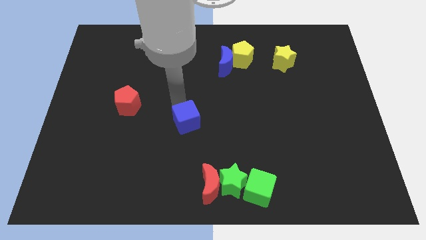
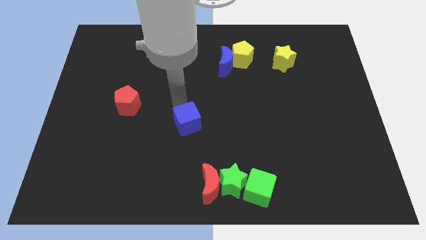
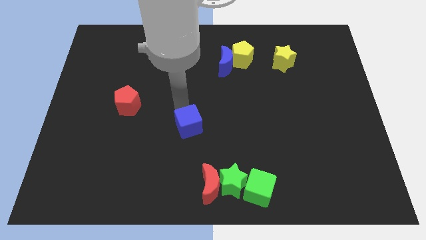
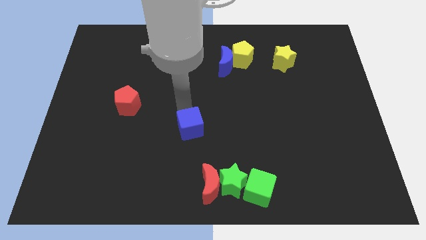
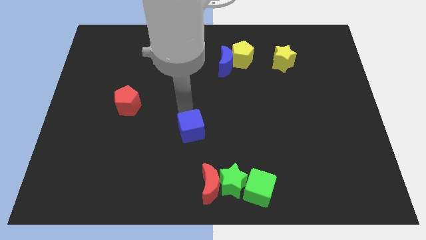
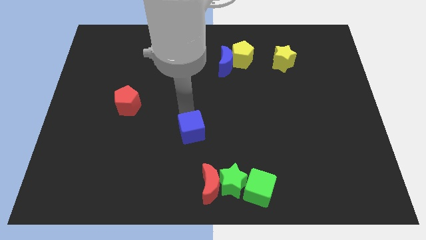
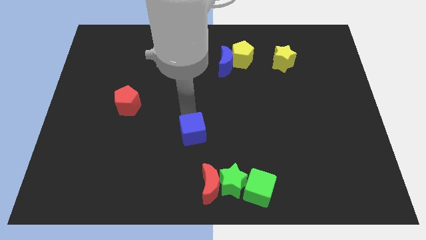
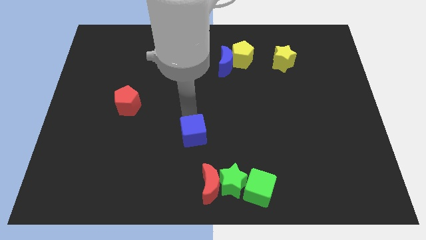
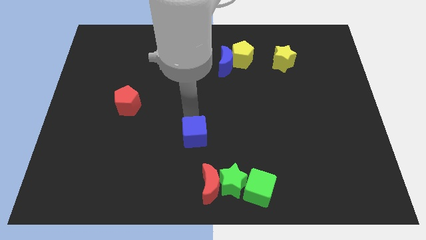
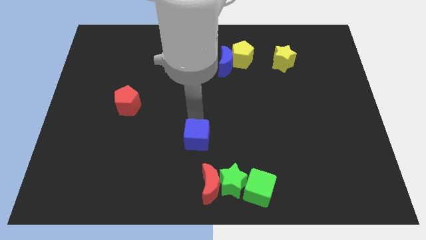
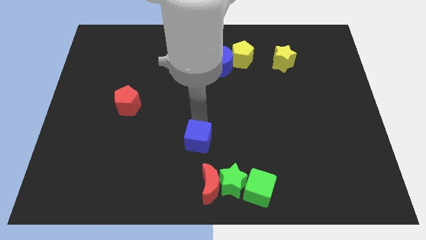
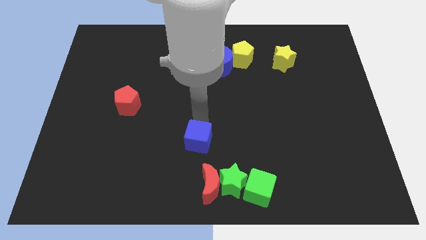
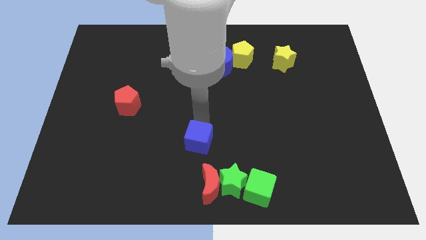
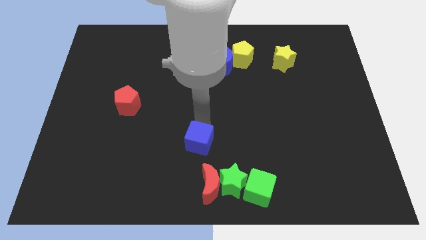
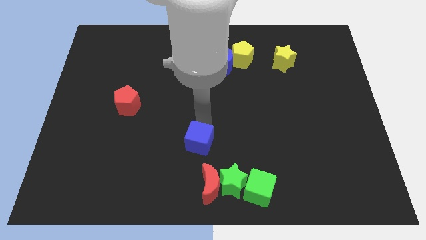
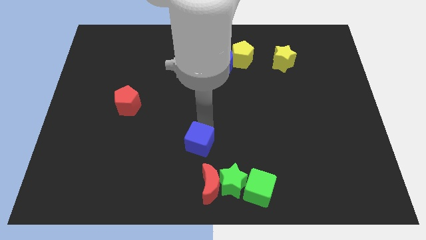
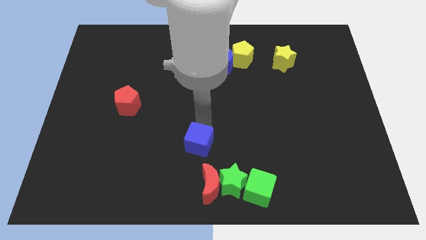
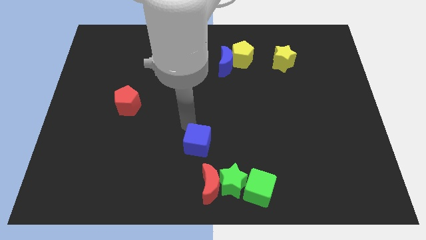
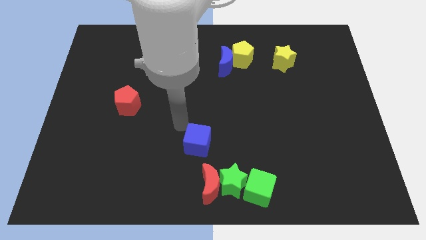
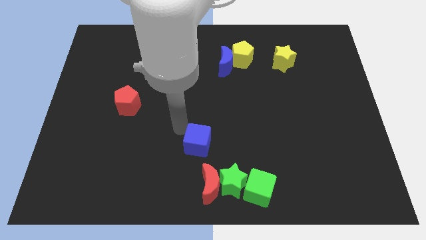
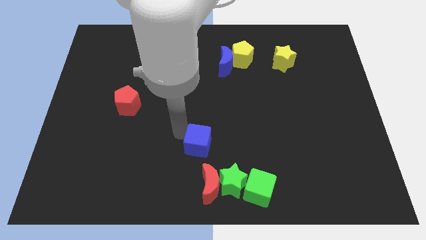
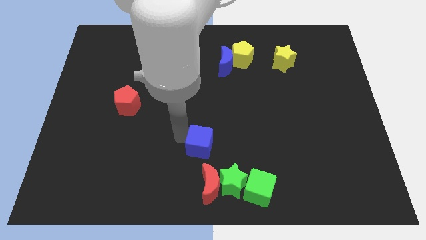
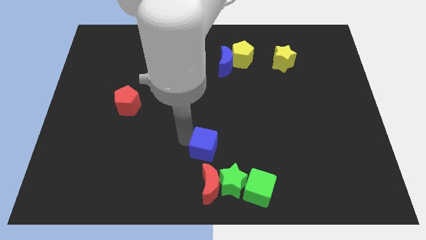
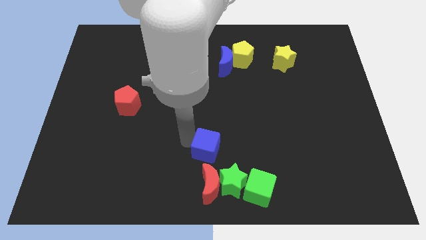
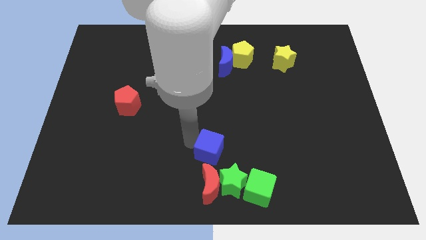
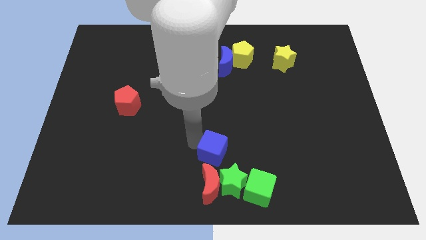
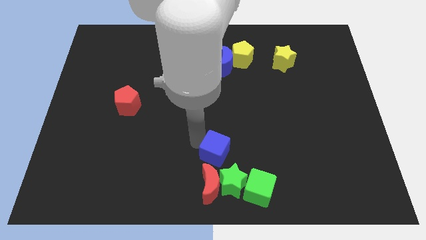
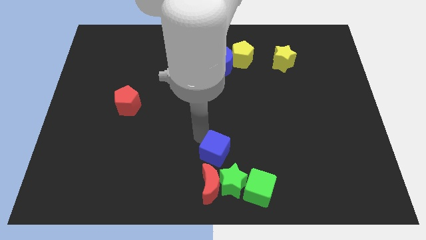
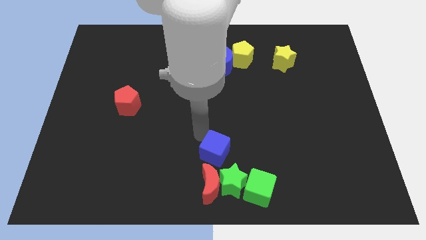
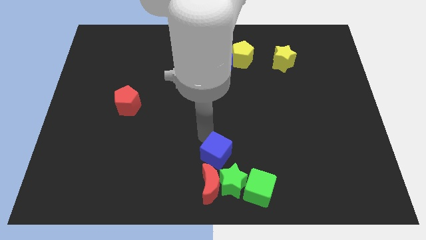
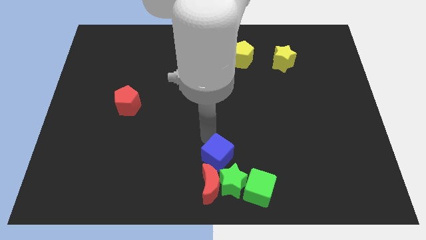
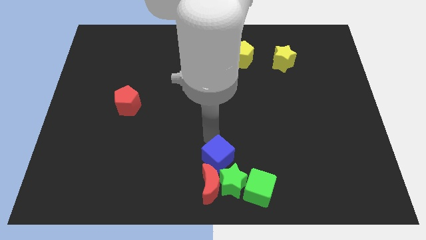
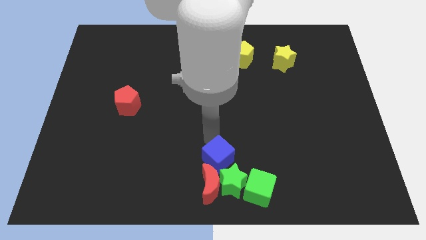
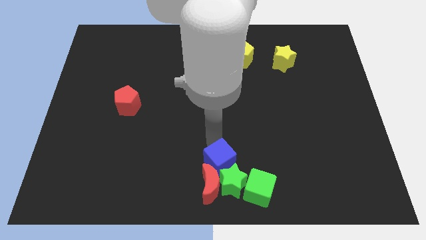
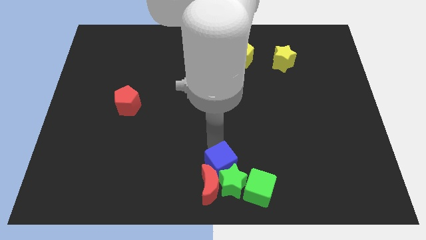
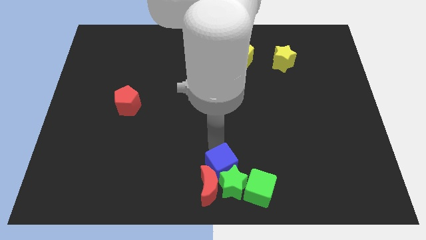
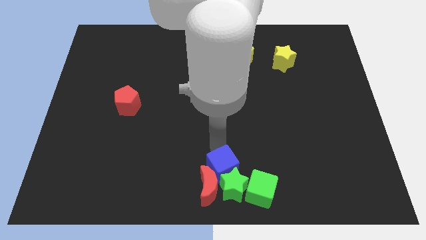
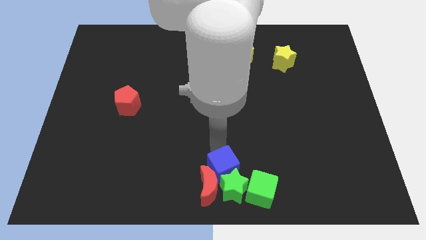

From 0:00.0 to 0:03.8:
push the blue cube into a group of blocks

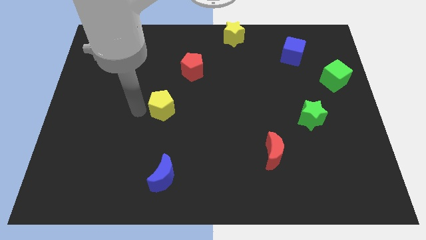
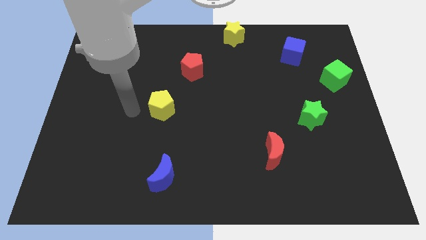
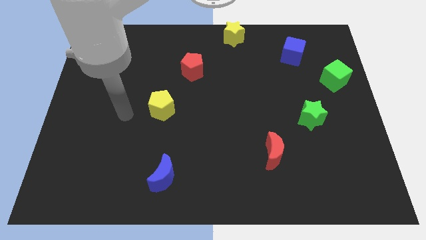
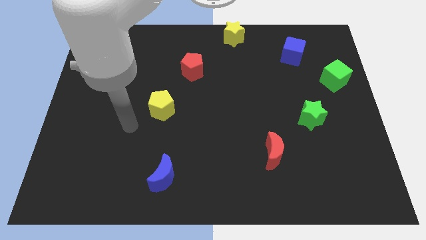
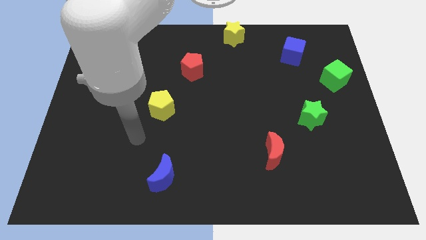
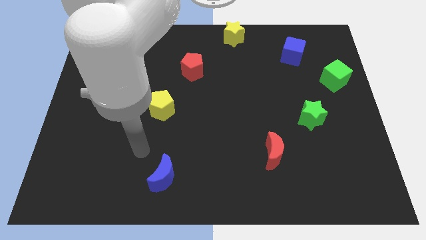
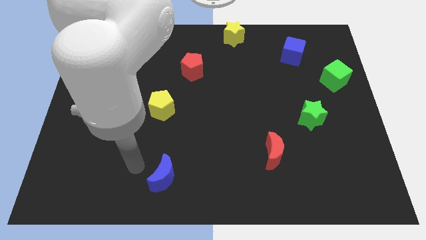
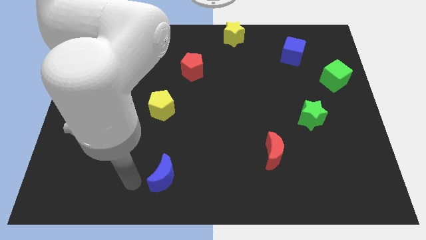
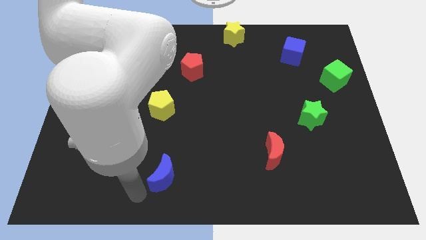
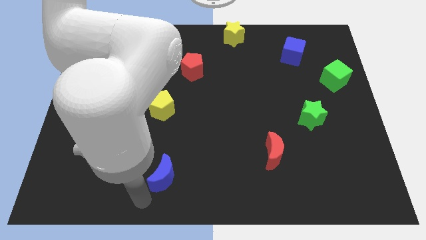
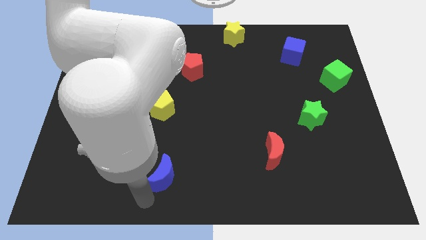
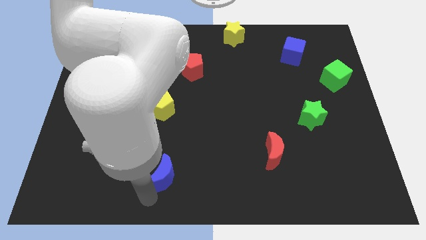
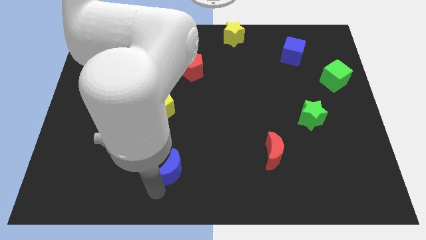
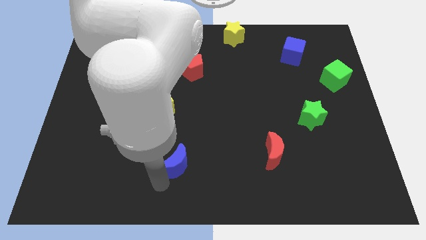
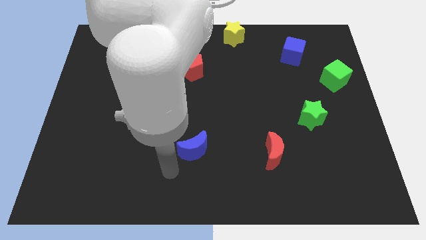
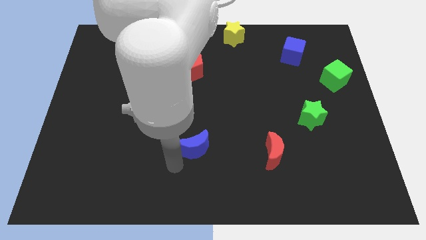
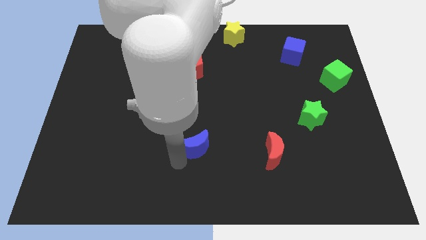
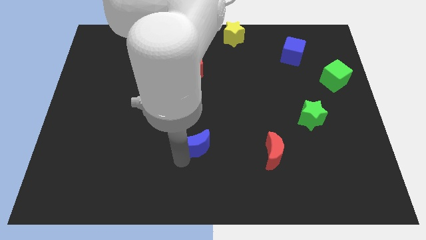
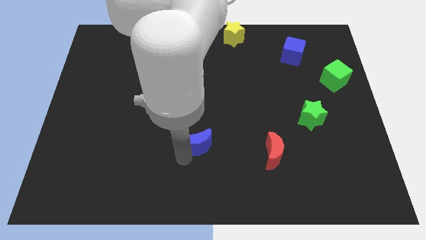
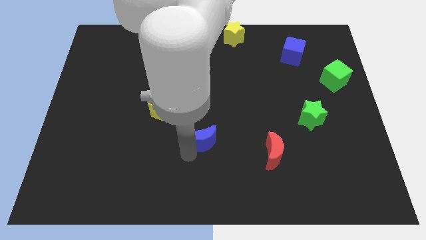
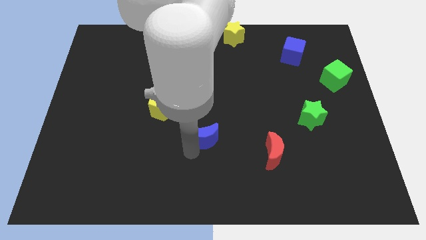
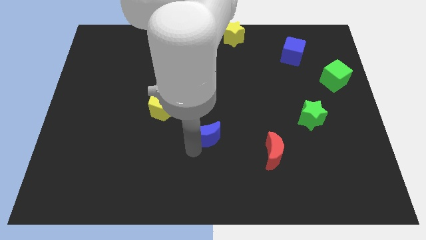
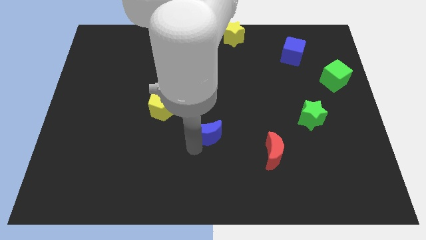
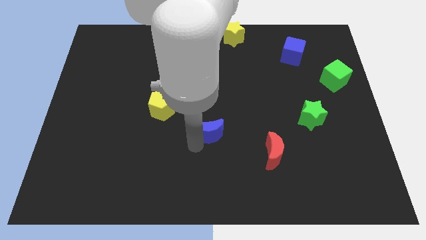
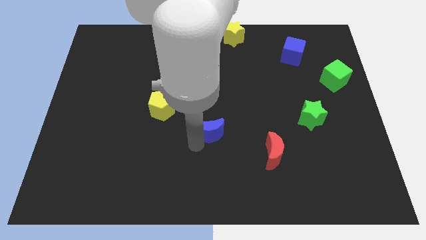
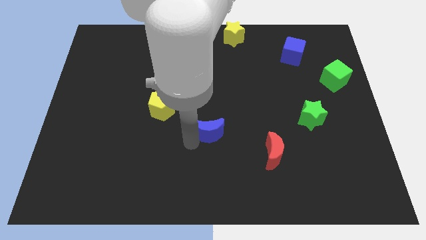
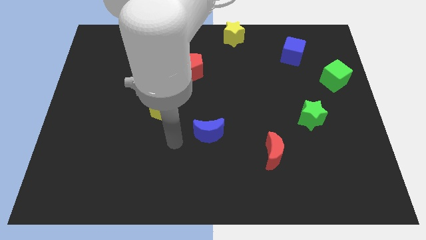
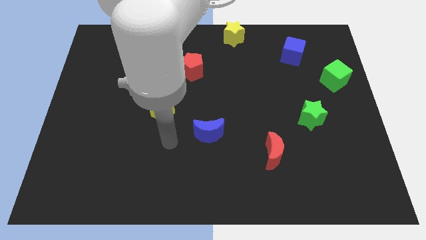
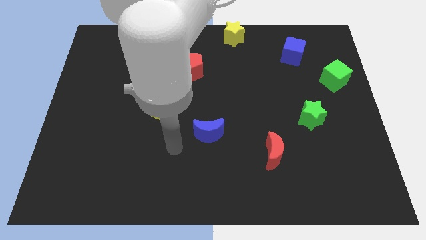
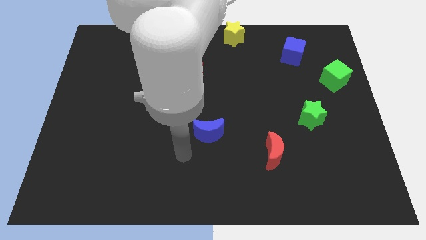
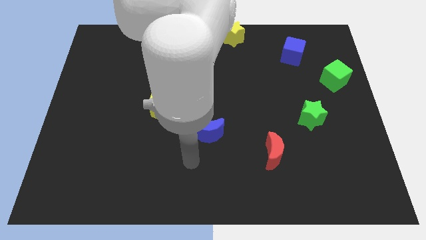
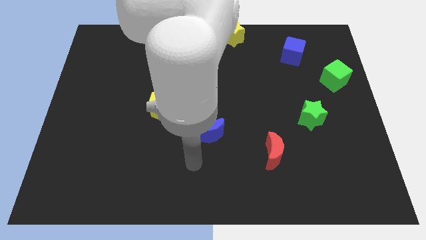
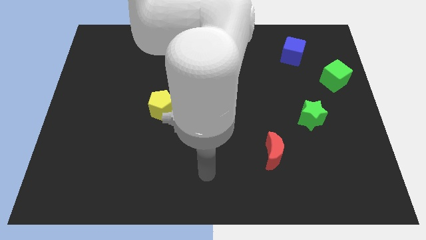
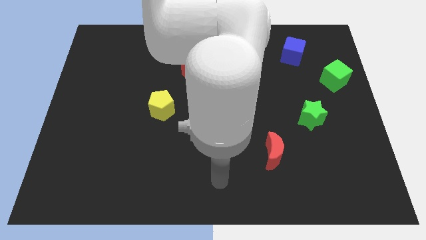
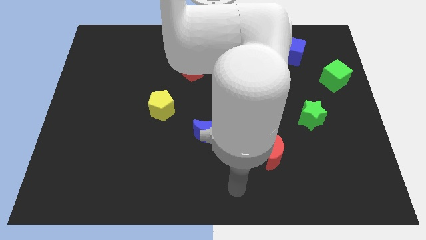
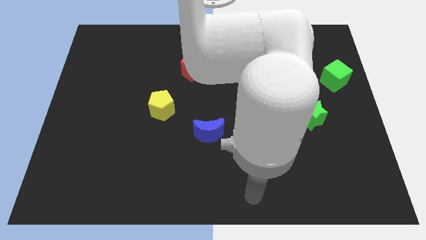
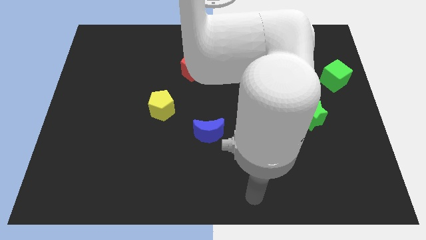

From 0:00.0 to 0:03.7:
move the blue crescent to the top of the board

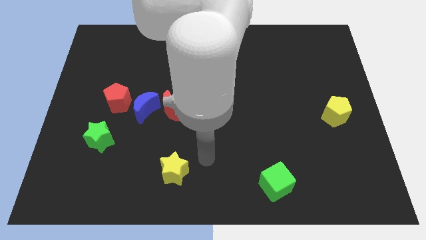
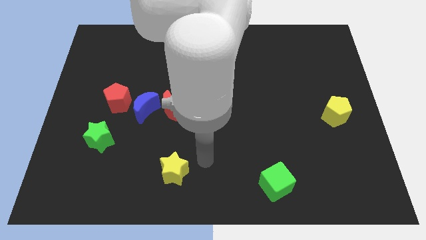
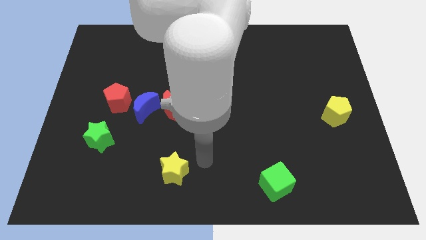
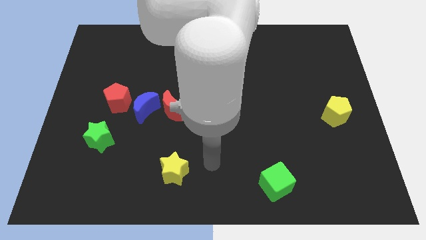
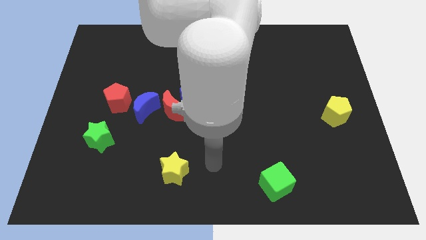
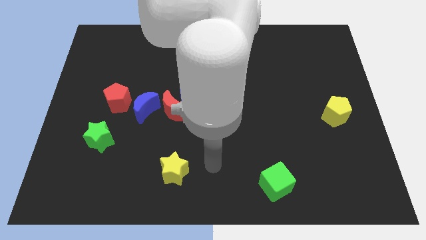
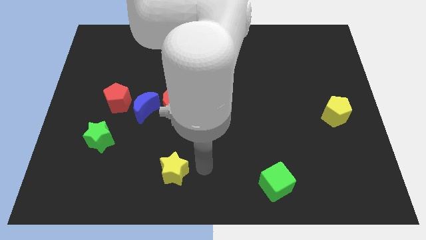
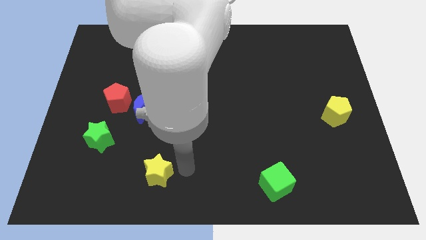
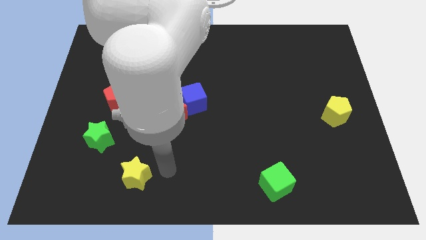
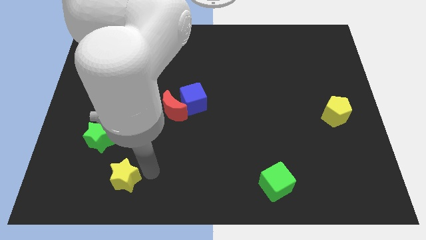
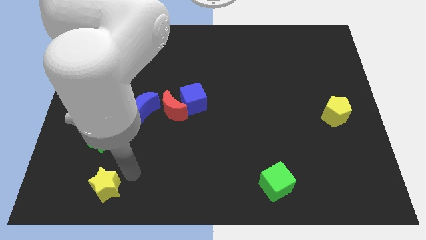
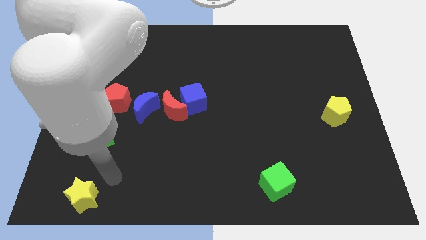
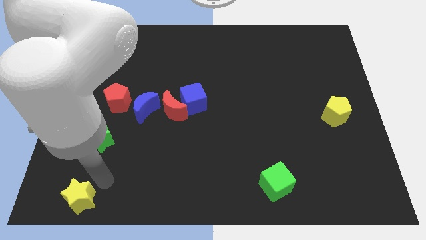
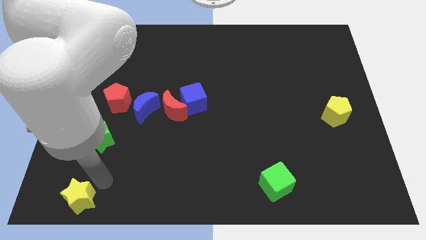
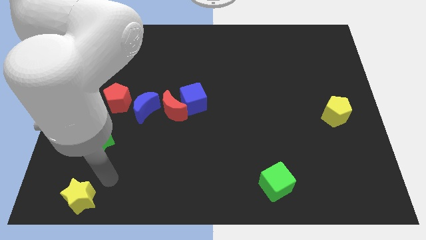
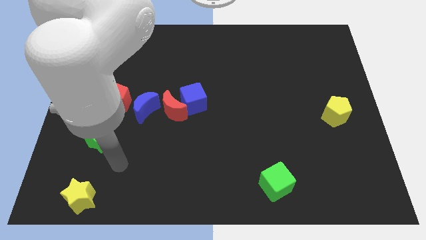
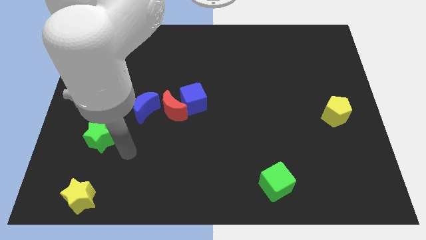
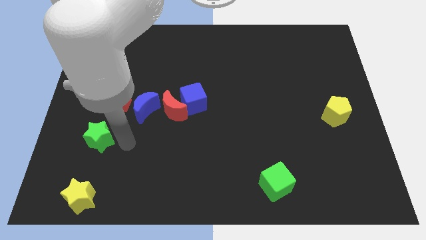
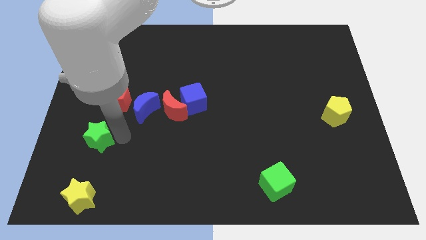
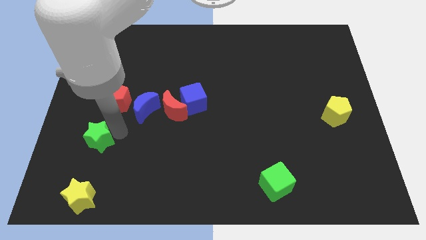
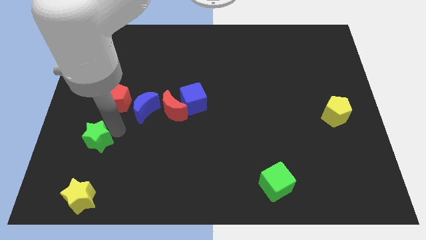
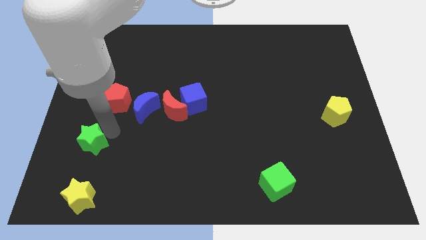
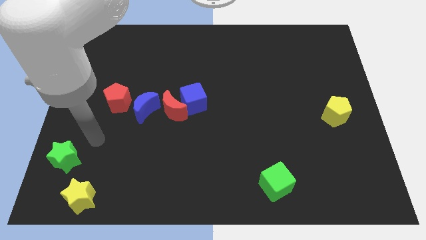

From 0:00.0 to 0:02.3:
slide the yellow star at the bottom left side
